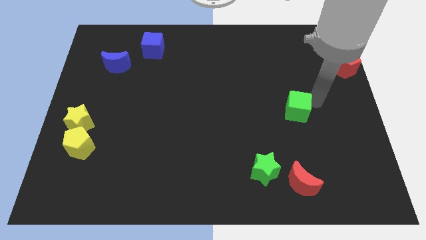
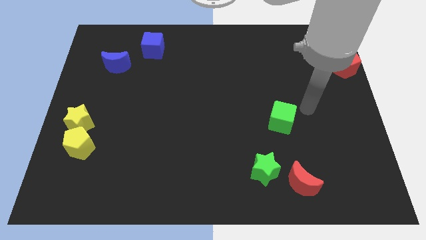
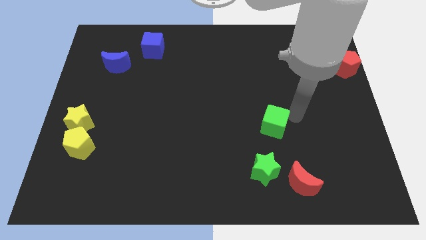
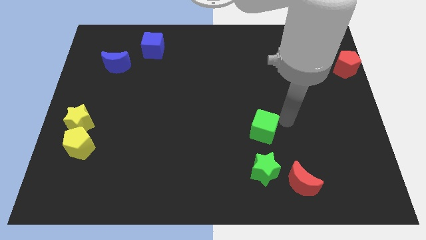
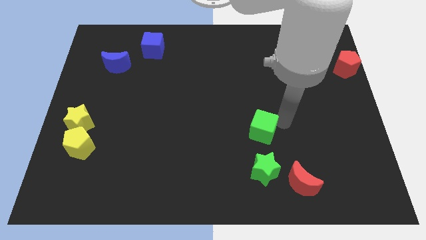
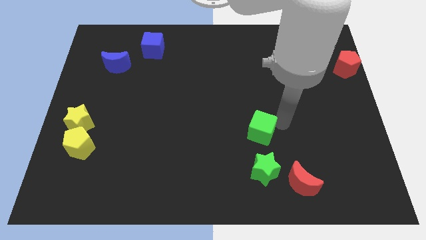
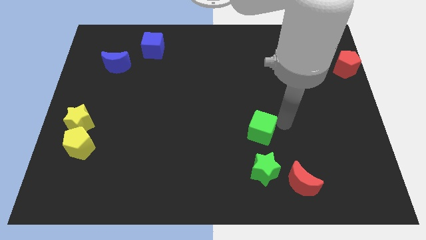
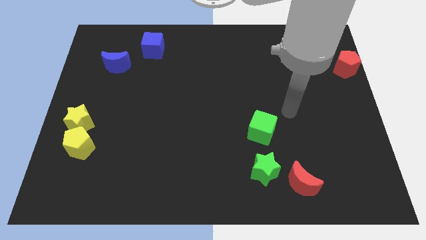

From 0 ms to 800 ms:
move the green cube vertical to the green star

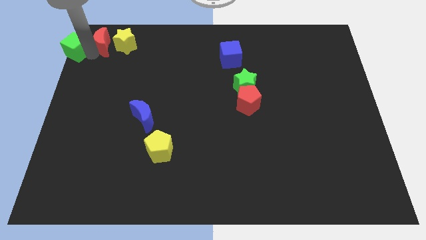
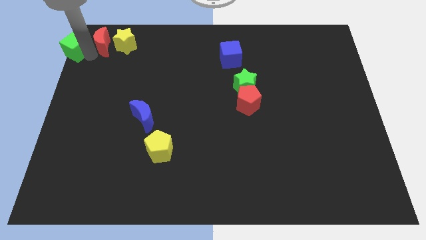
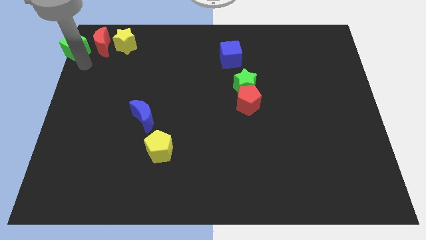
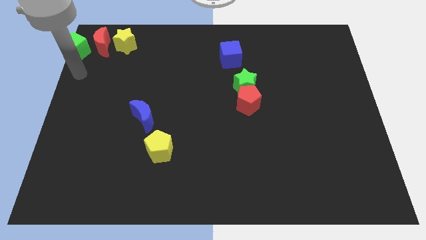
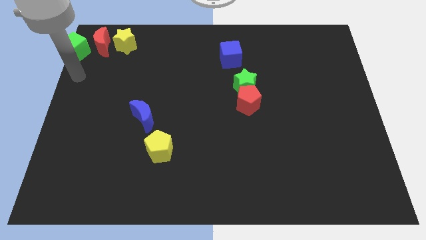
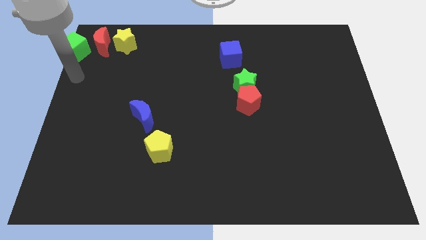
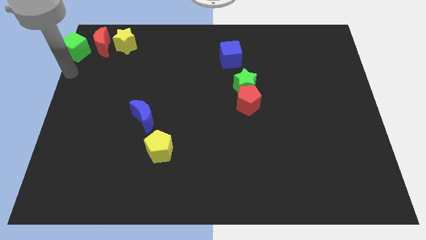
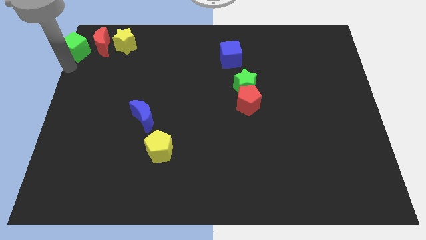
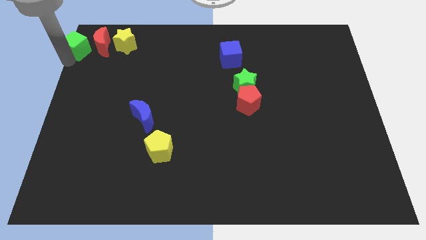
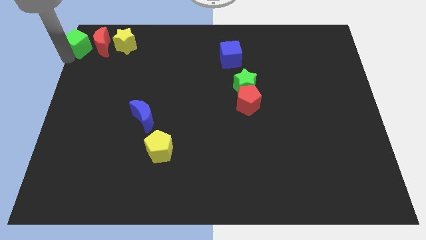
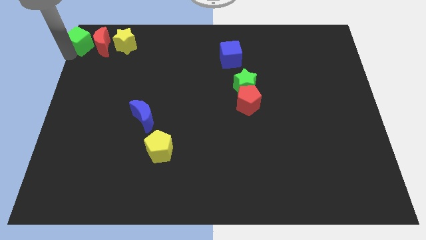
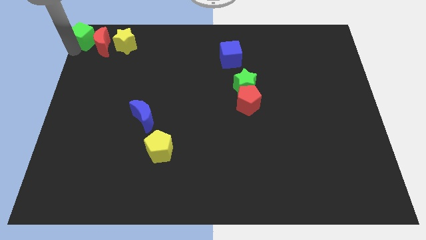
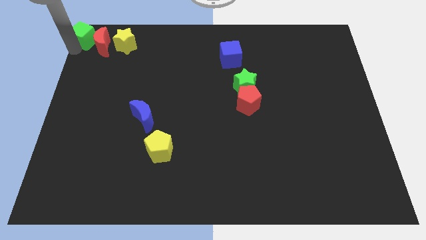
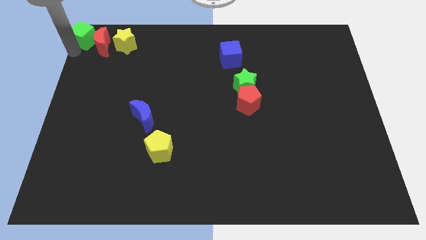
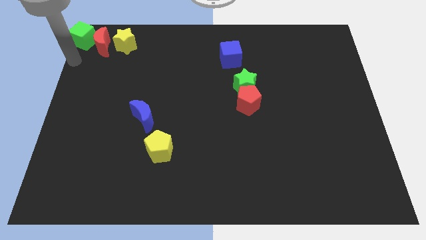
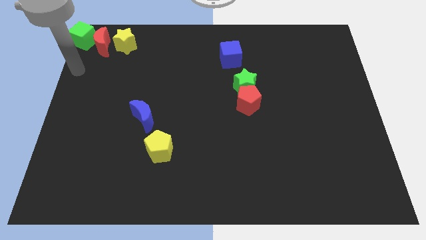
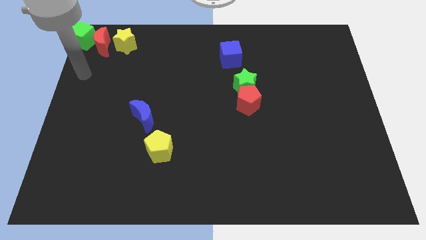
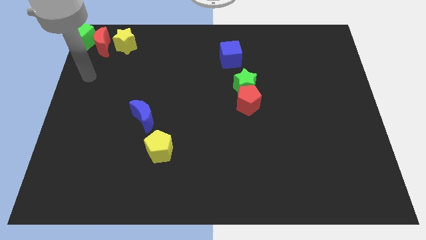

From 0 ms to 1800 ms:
place the green cube at the top left corner of the board

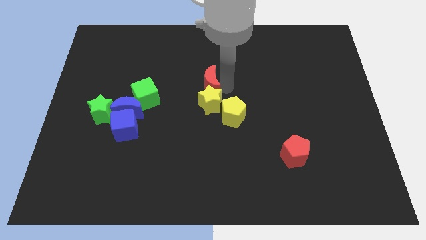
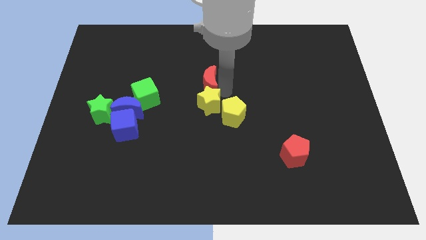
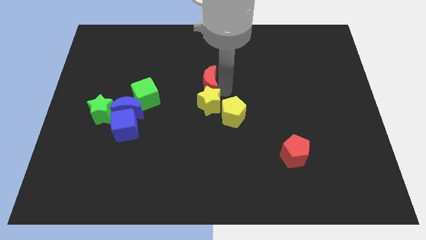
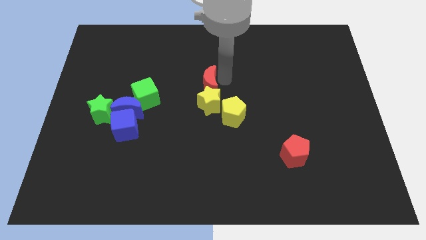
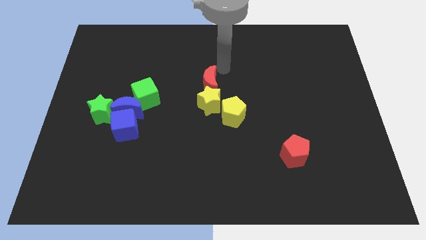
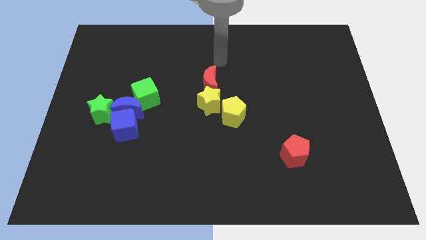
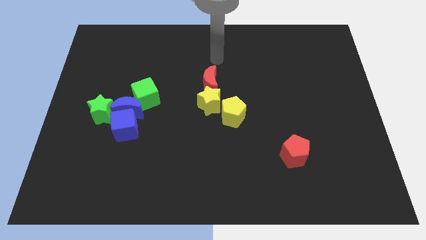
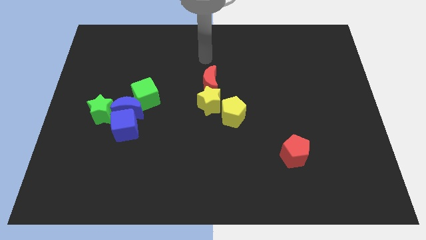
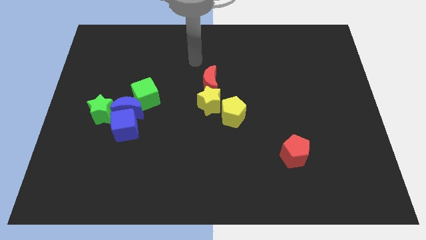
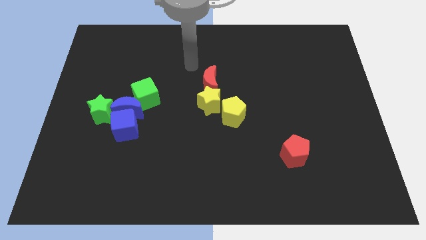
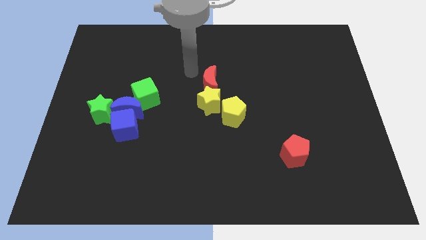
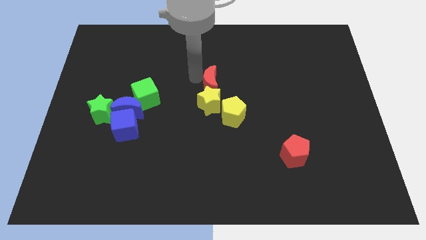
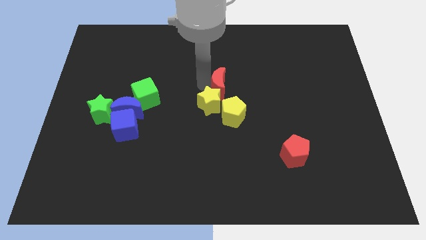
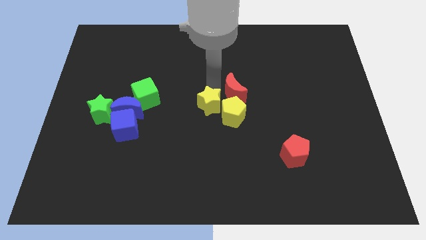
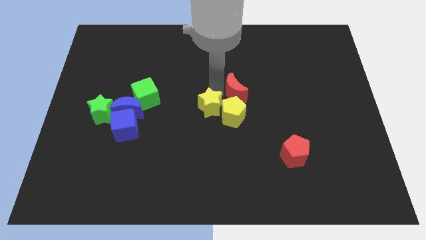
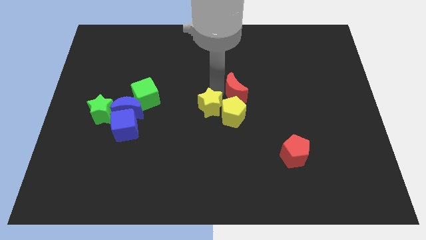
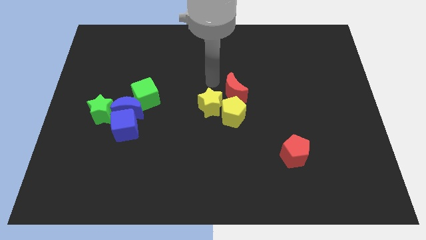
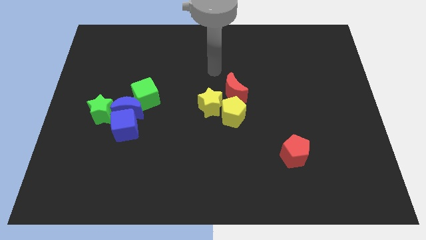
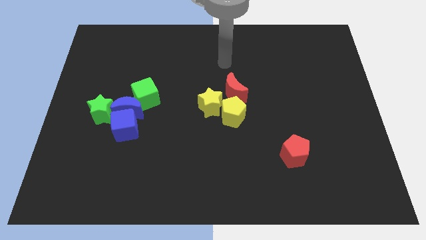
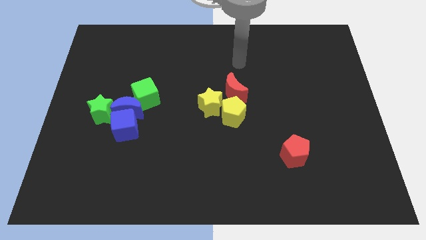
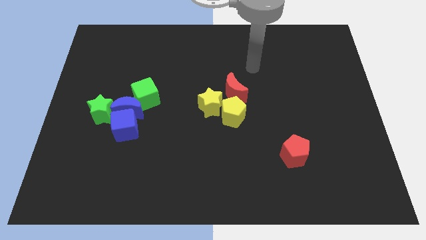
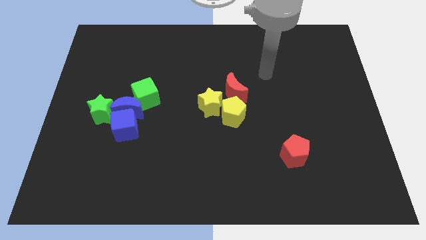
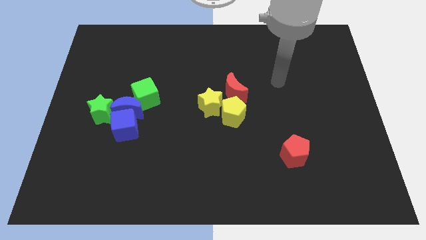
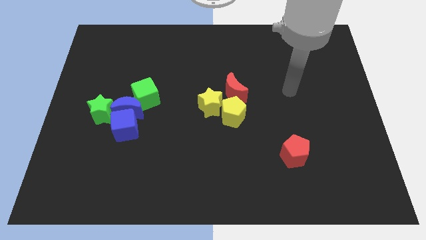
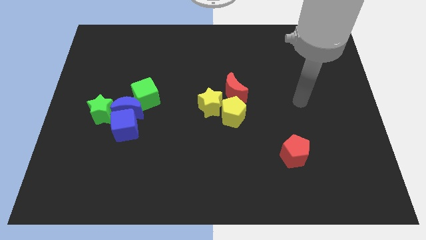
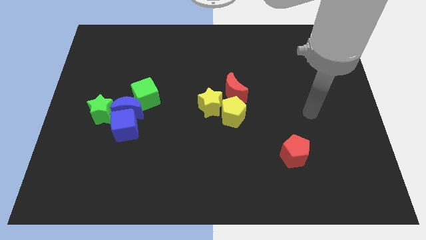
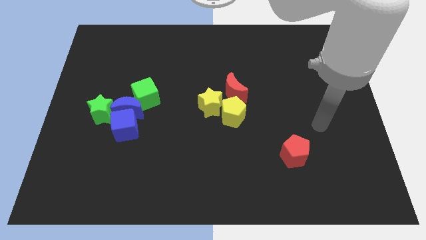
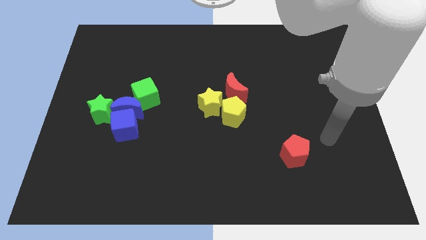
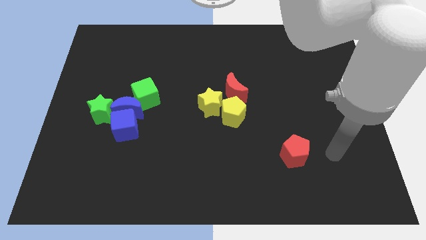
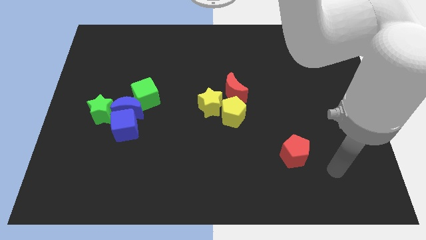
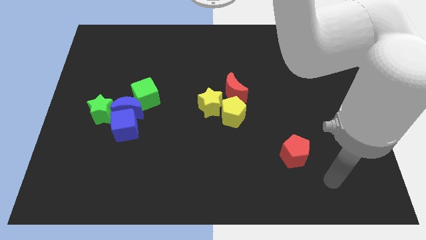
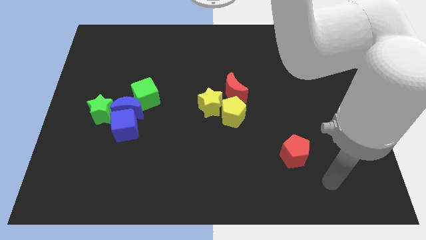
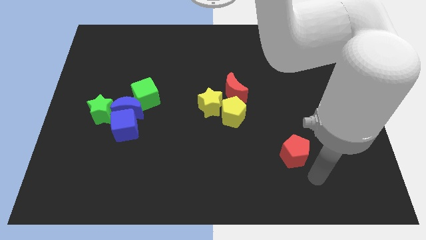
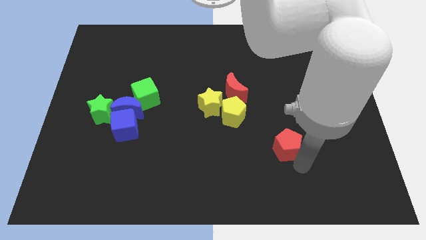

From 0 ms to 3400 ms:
place your arm below the red pentagon

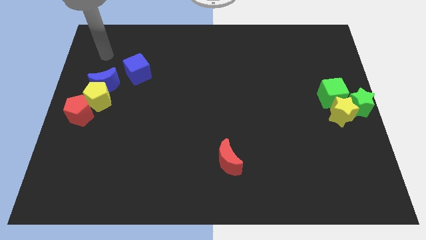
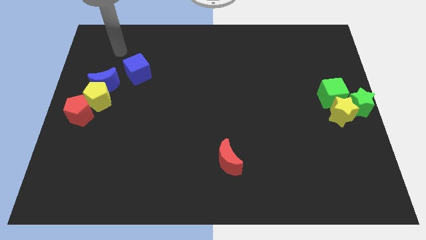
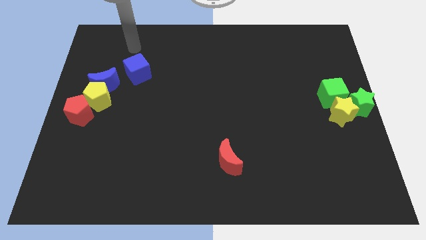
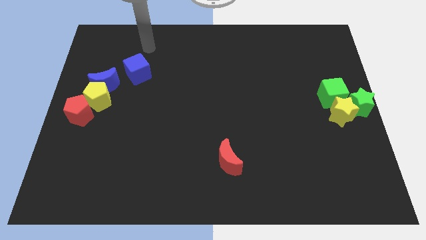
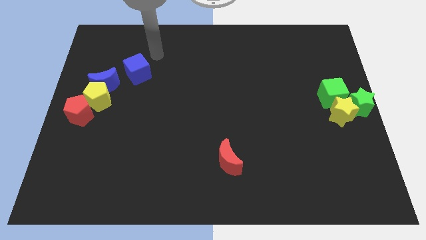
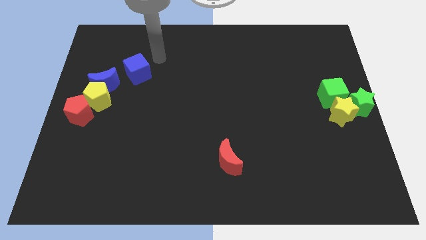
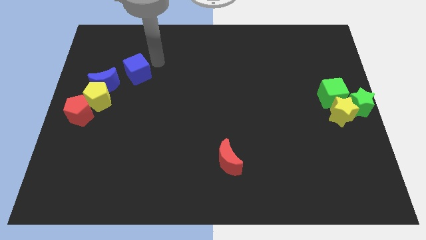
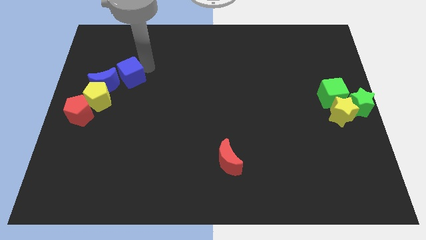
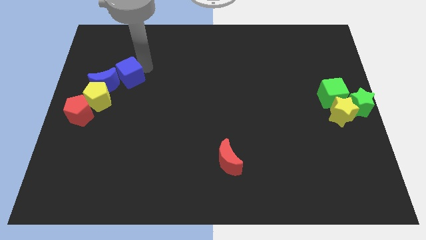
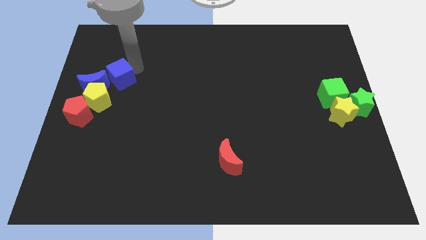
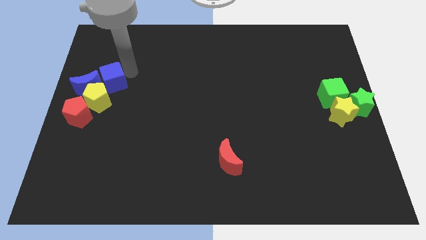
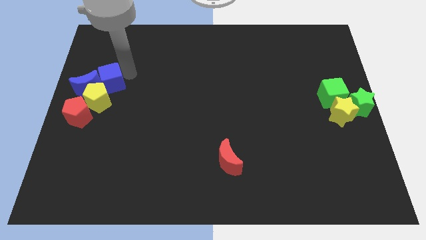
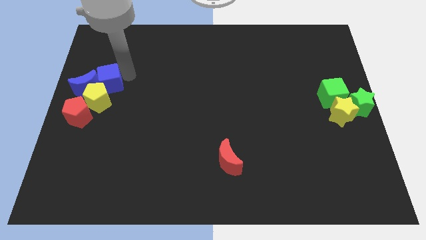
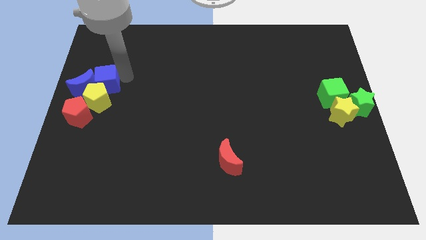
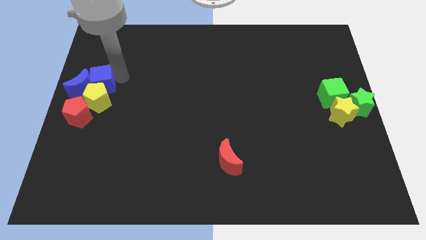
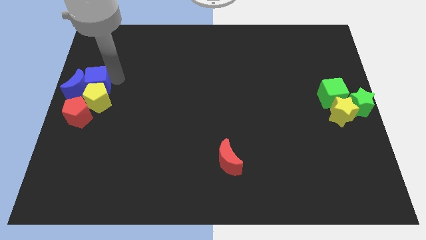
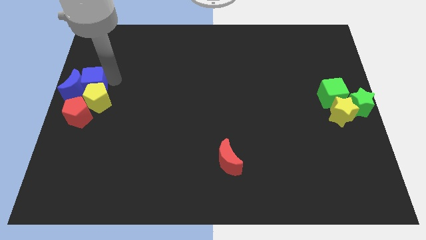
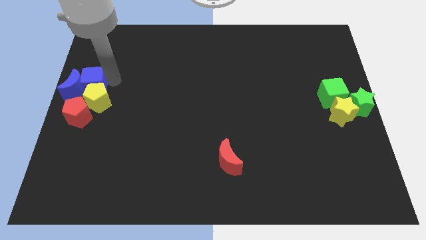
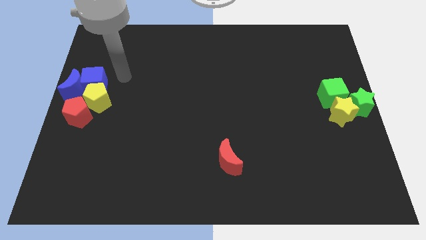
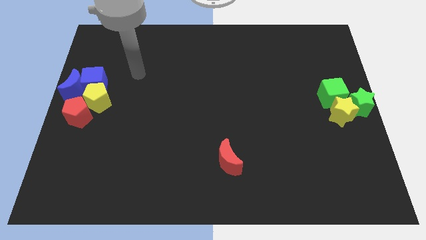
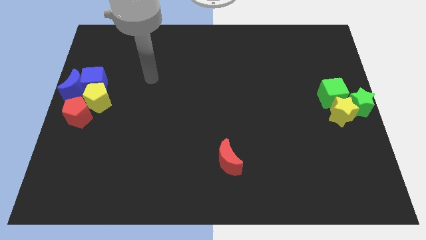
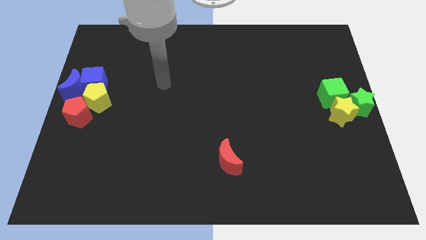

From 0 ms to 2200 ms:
place blue cube to the top of yellow pentagon

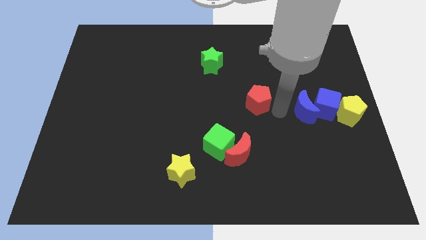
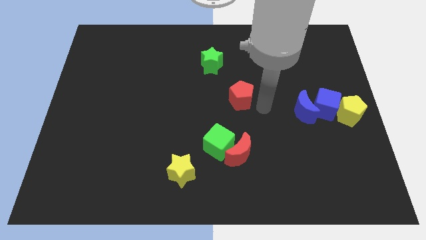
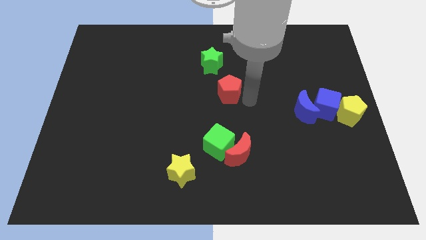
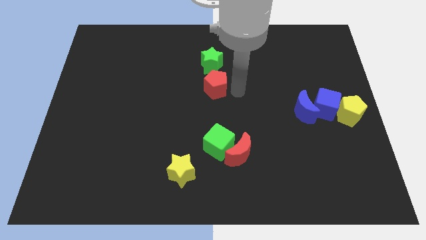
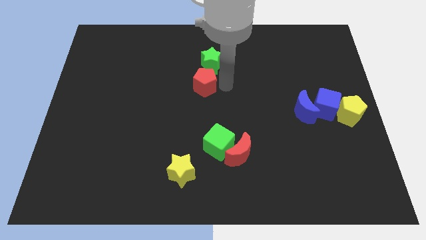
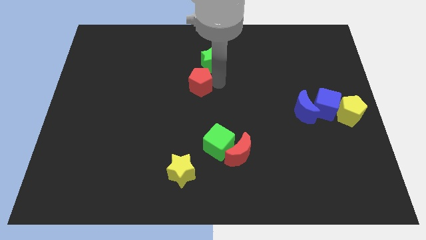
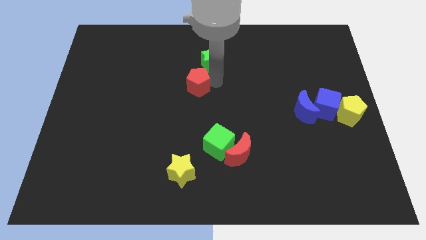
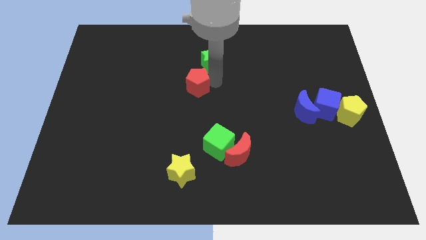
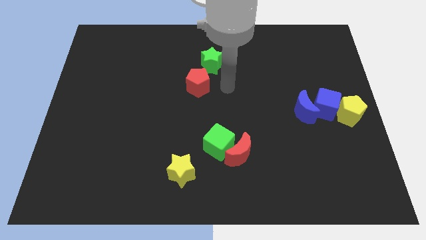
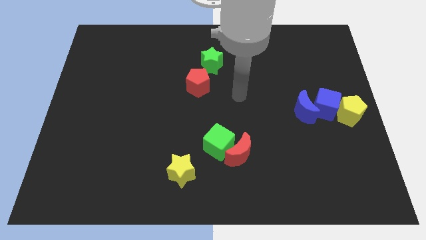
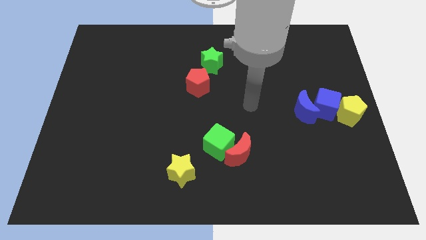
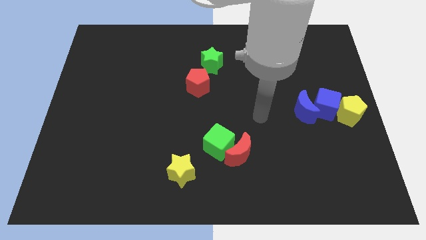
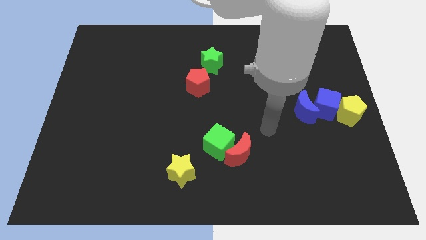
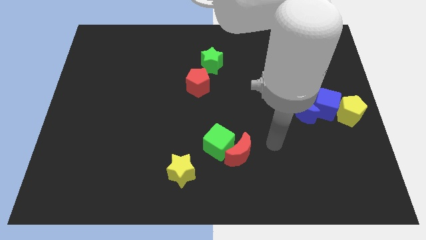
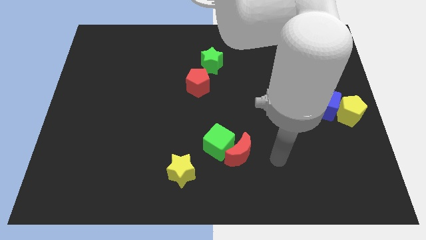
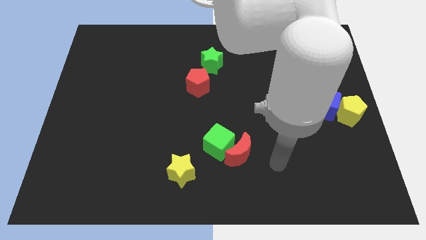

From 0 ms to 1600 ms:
move the red pentagon to the left bottom of the green star
